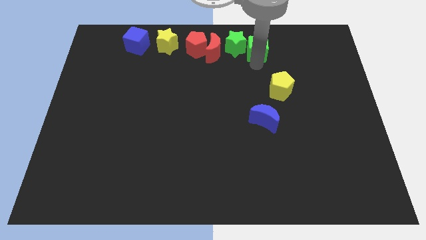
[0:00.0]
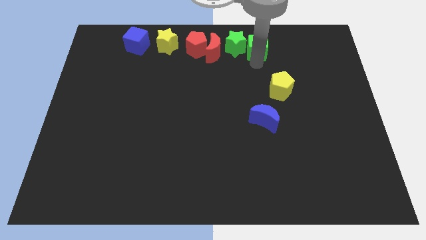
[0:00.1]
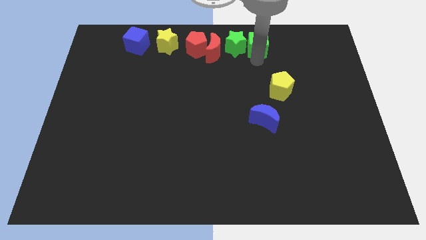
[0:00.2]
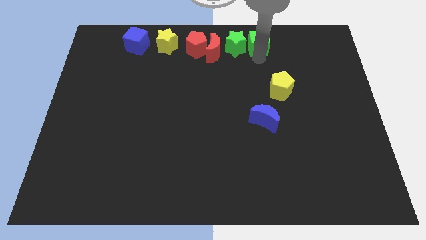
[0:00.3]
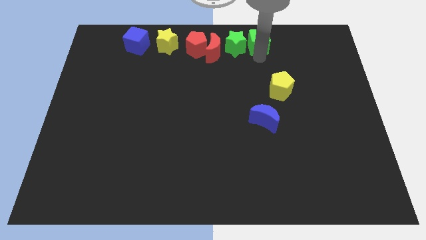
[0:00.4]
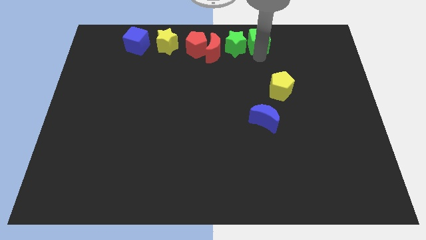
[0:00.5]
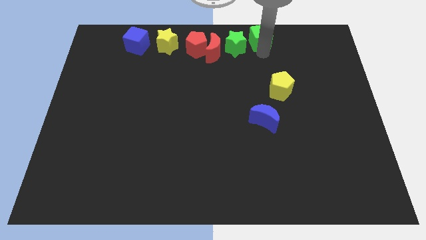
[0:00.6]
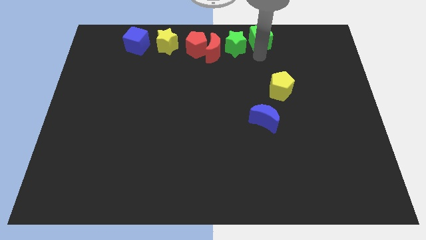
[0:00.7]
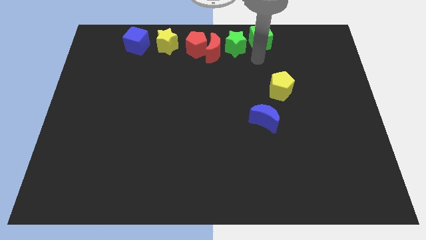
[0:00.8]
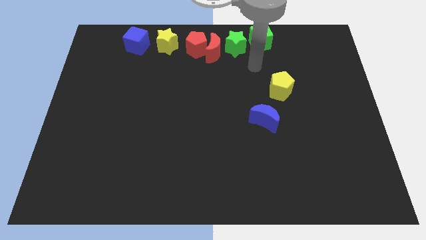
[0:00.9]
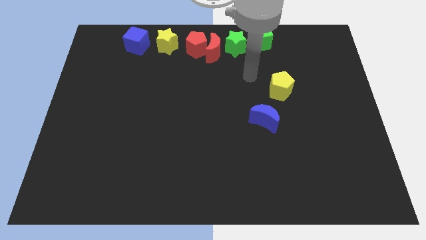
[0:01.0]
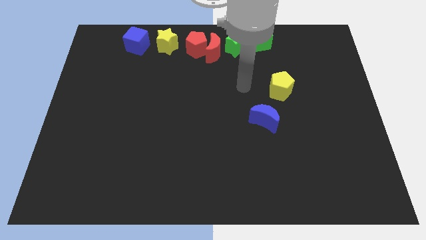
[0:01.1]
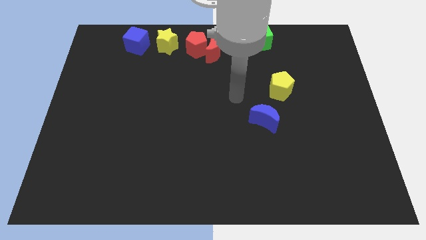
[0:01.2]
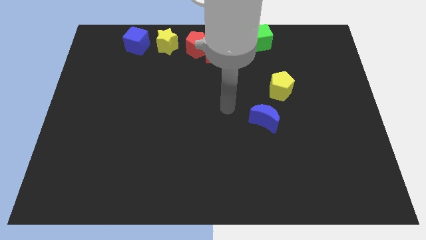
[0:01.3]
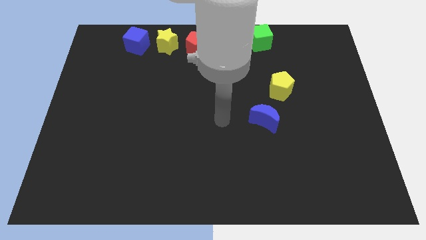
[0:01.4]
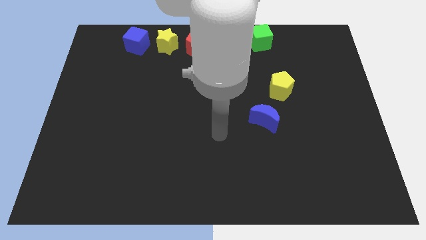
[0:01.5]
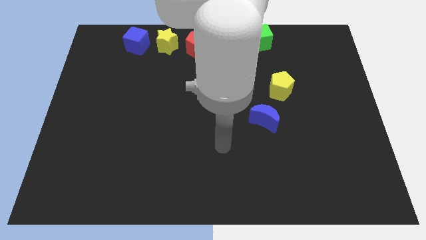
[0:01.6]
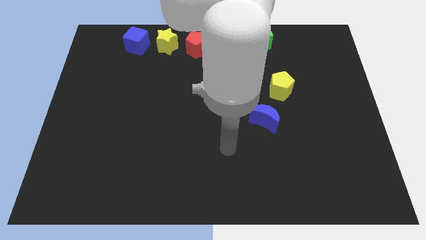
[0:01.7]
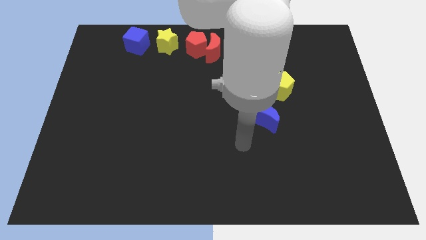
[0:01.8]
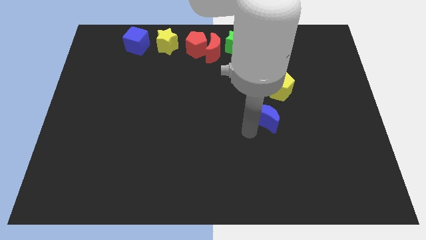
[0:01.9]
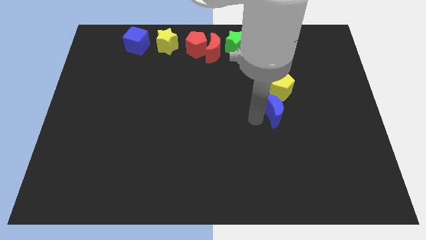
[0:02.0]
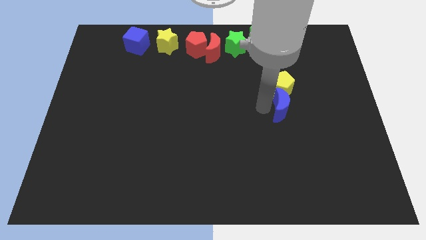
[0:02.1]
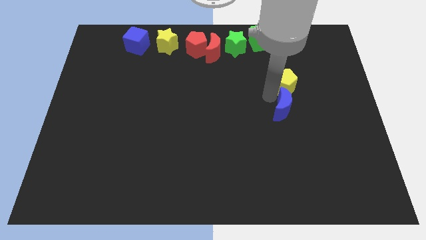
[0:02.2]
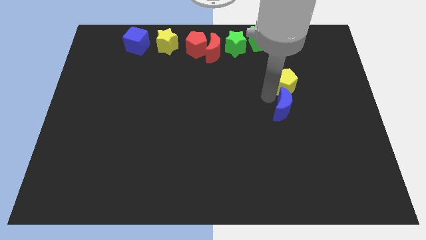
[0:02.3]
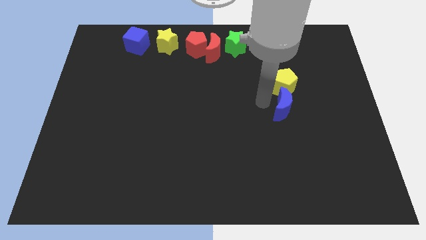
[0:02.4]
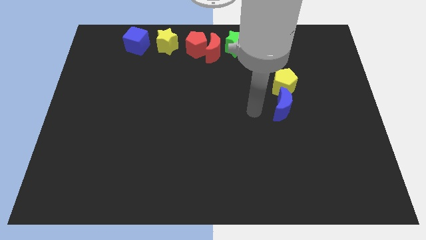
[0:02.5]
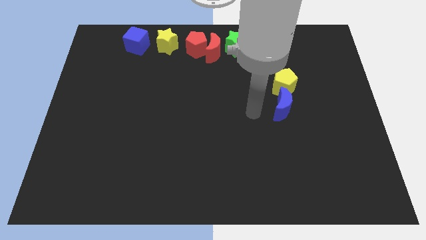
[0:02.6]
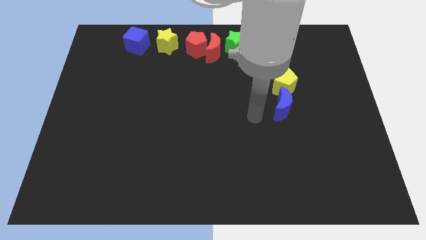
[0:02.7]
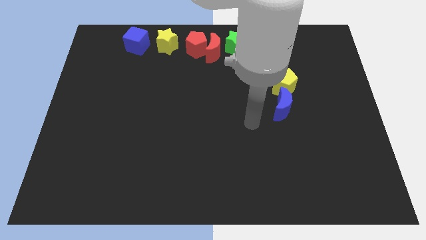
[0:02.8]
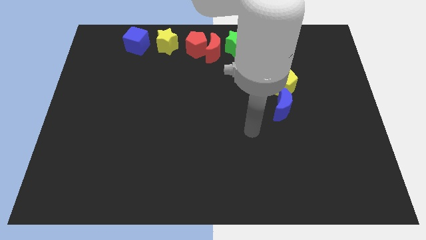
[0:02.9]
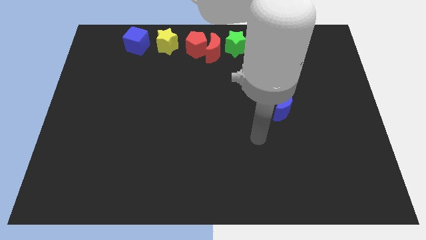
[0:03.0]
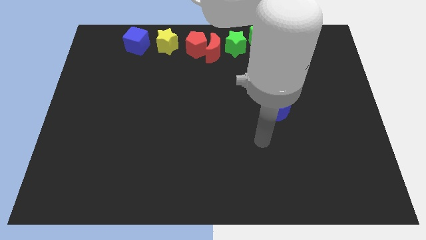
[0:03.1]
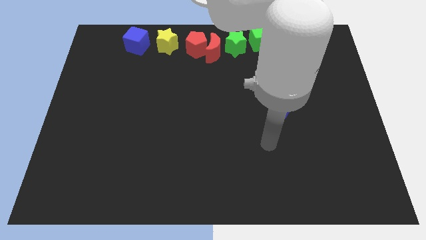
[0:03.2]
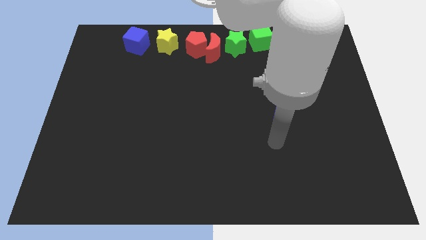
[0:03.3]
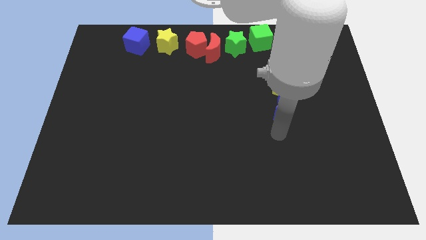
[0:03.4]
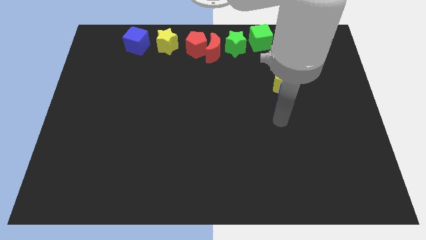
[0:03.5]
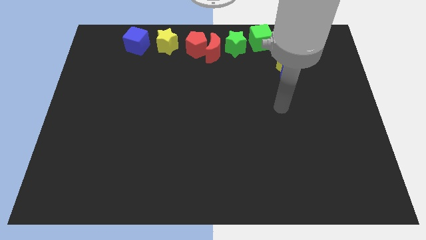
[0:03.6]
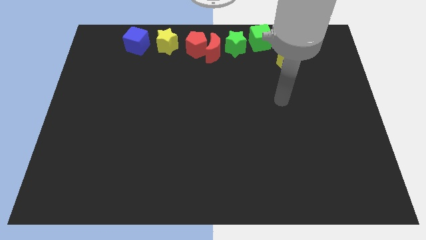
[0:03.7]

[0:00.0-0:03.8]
push the blue moon into the yellow pentagon

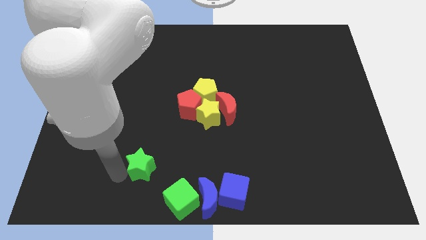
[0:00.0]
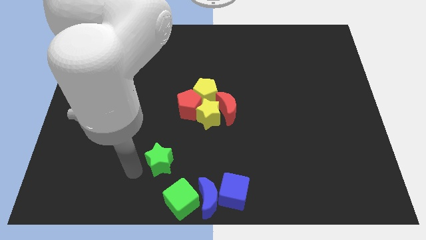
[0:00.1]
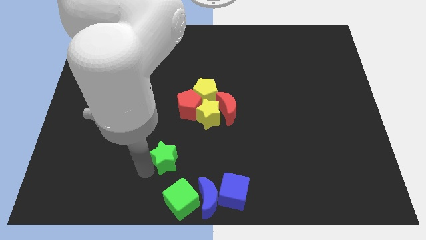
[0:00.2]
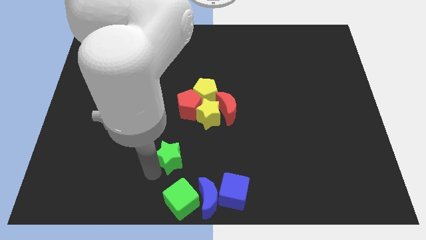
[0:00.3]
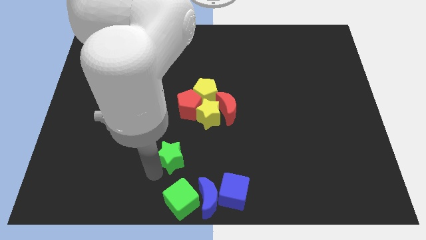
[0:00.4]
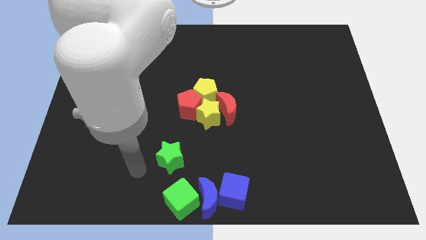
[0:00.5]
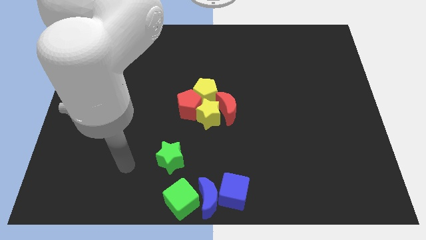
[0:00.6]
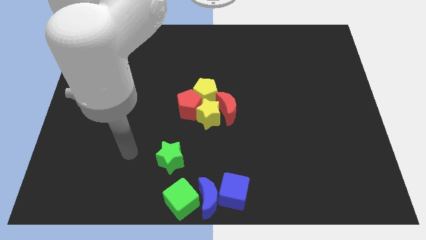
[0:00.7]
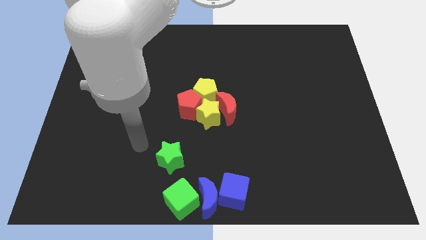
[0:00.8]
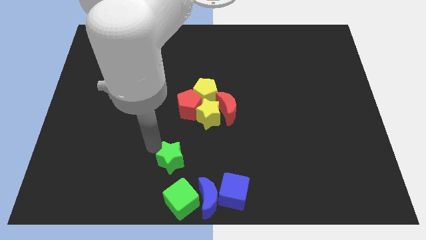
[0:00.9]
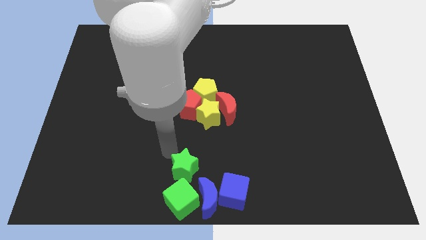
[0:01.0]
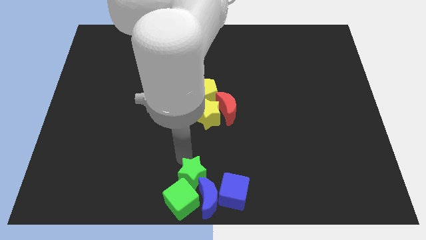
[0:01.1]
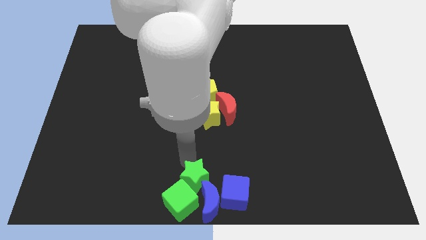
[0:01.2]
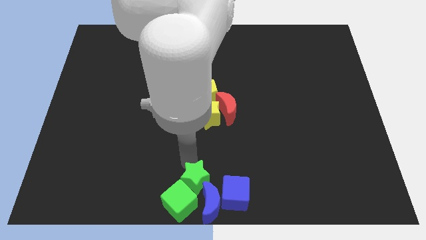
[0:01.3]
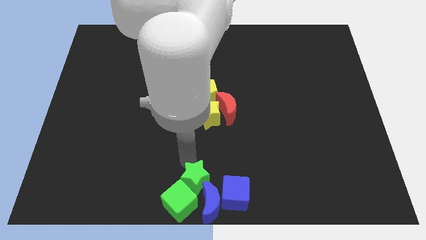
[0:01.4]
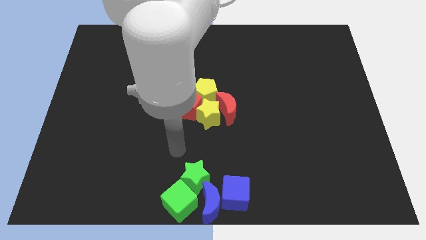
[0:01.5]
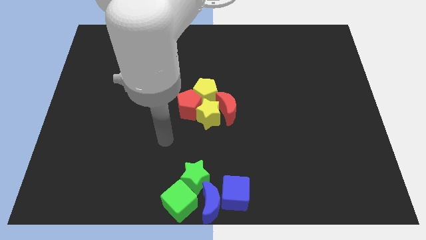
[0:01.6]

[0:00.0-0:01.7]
move green star above green cube and blue moon

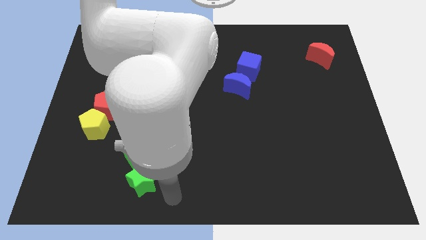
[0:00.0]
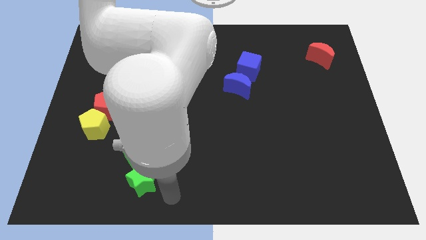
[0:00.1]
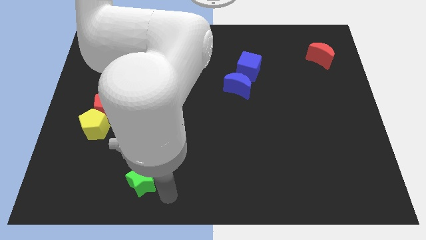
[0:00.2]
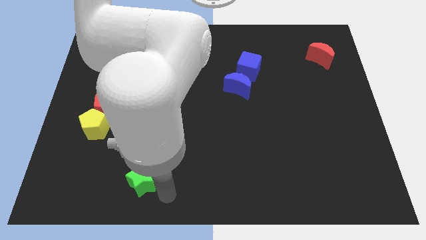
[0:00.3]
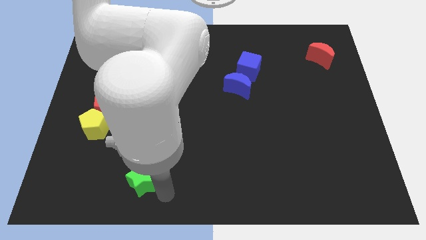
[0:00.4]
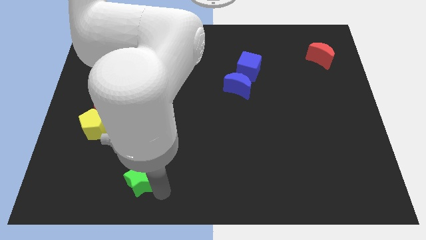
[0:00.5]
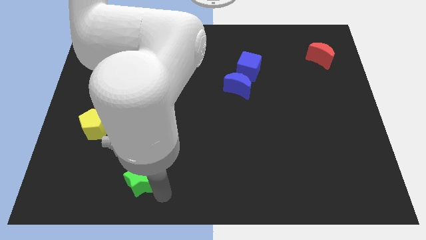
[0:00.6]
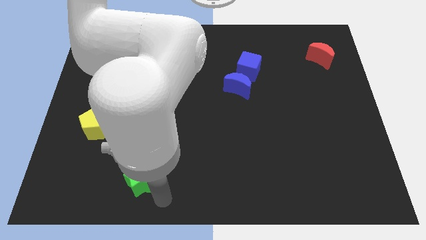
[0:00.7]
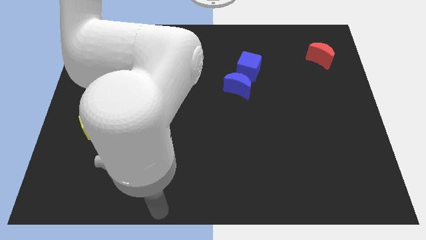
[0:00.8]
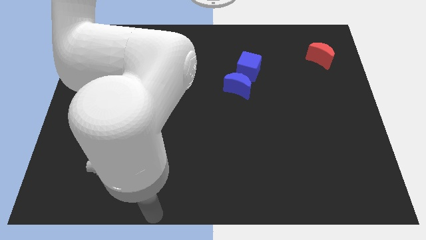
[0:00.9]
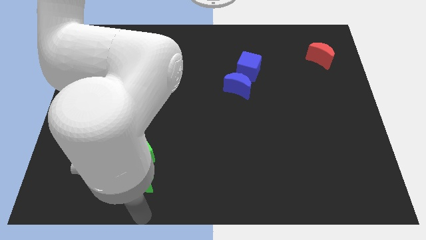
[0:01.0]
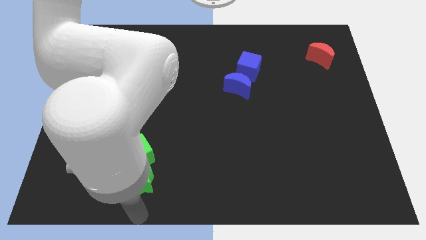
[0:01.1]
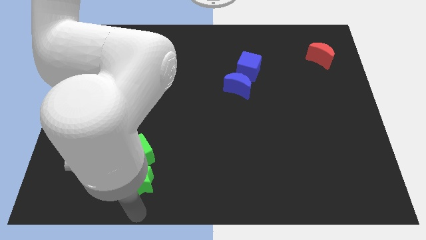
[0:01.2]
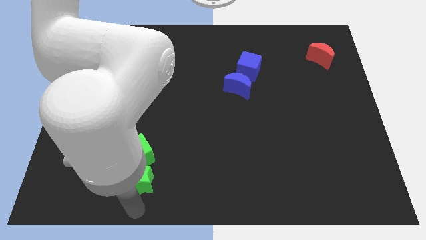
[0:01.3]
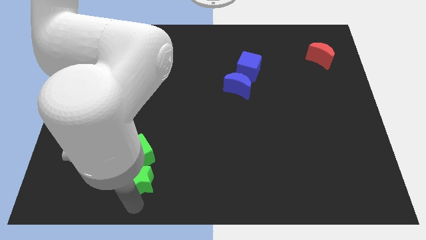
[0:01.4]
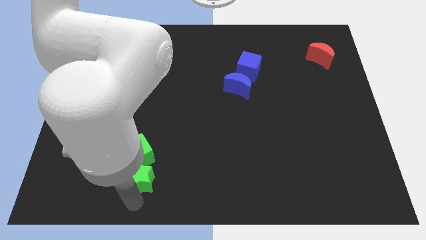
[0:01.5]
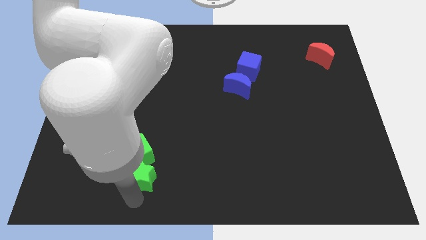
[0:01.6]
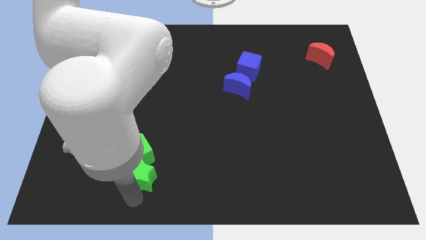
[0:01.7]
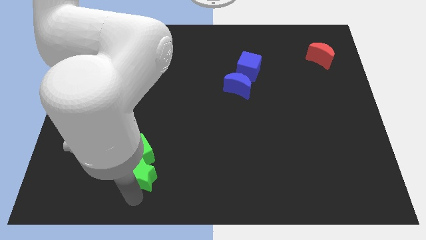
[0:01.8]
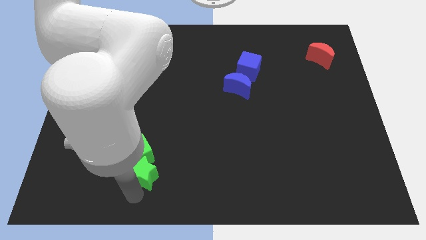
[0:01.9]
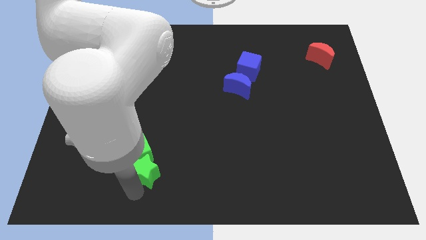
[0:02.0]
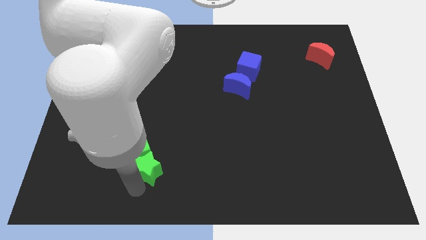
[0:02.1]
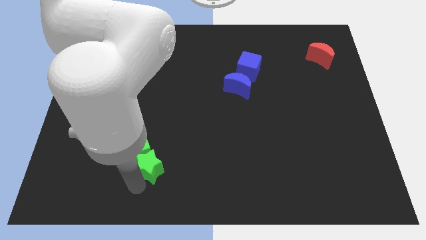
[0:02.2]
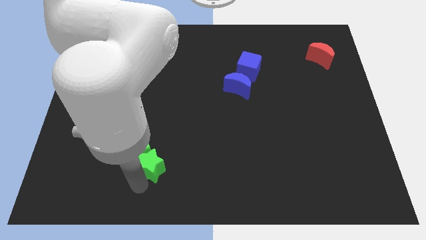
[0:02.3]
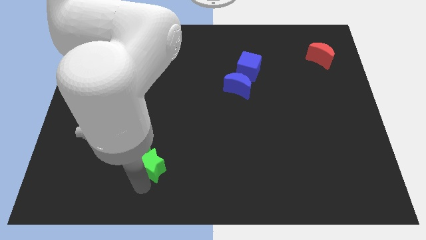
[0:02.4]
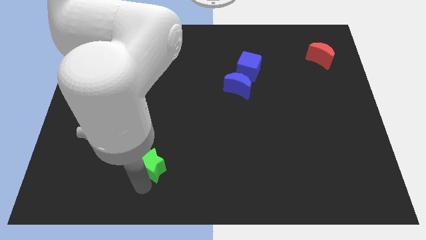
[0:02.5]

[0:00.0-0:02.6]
push the green star into the green cube at the bottom

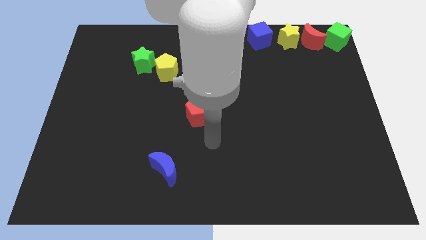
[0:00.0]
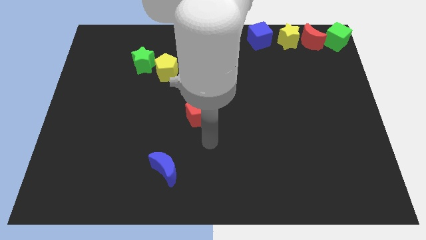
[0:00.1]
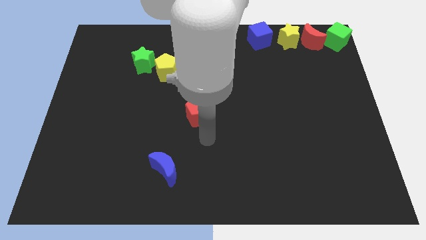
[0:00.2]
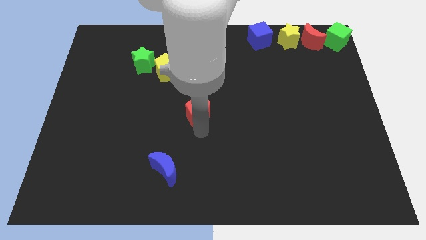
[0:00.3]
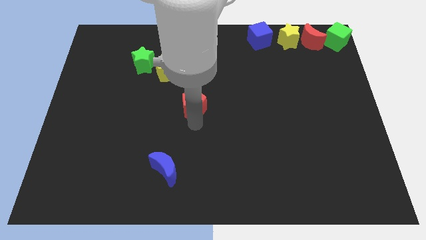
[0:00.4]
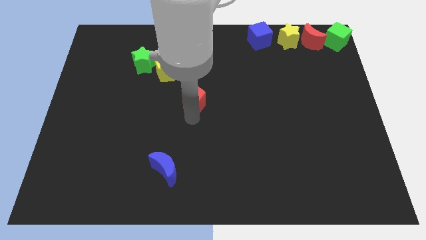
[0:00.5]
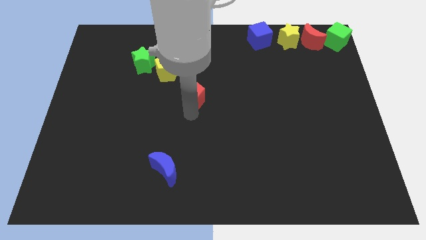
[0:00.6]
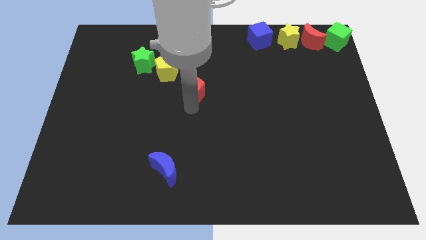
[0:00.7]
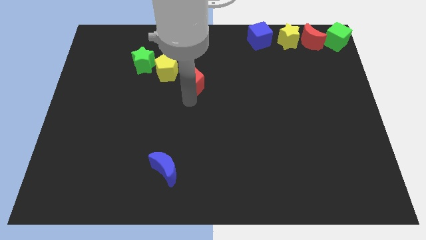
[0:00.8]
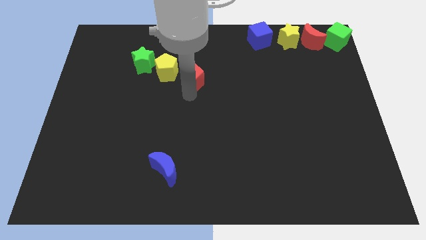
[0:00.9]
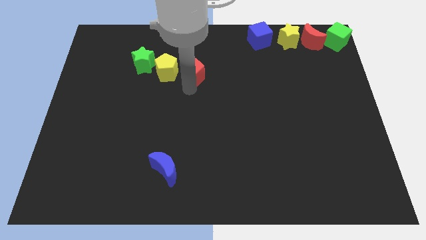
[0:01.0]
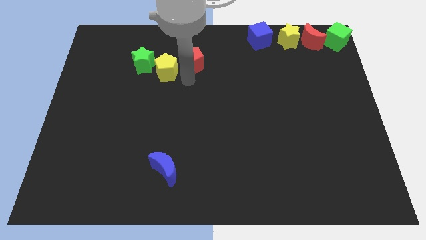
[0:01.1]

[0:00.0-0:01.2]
move the red pentagon to the right of the yellow pentagon
